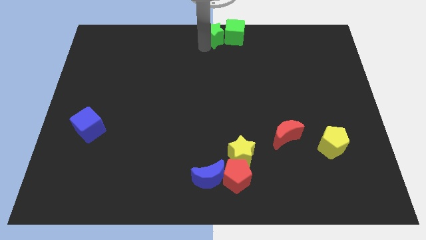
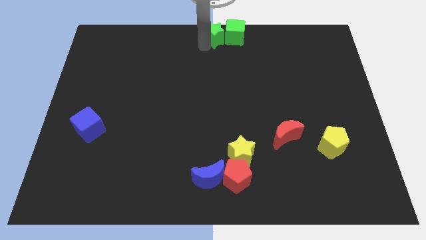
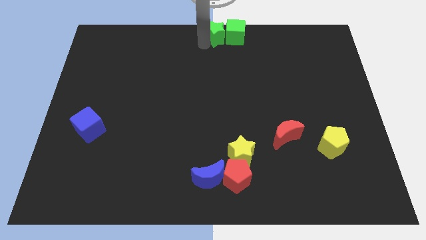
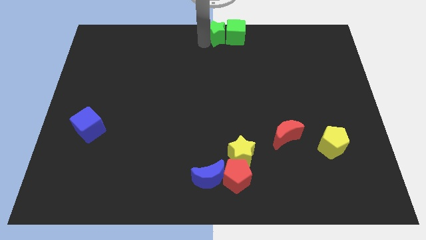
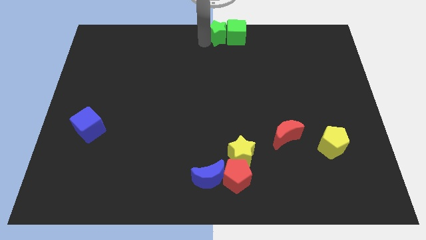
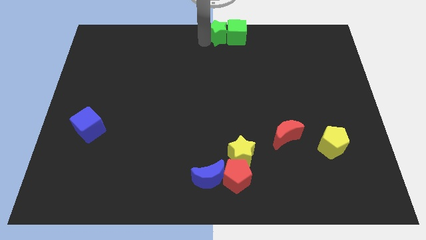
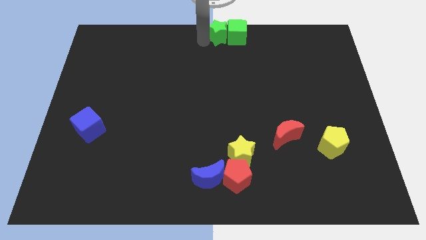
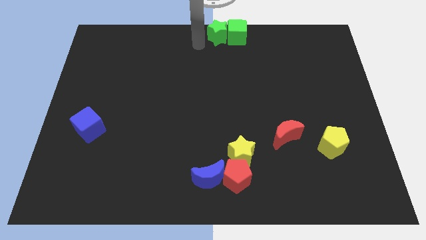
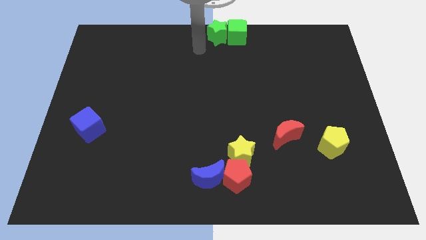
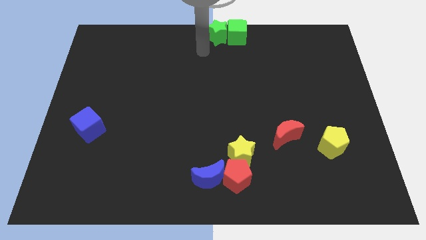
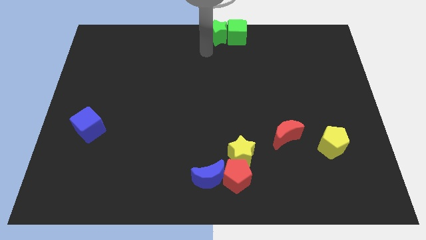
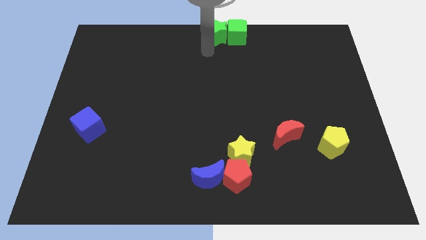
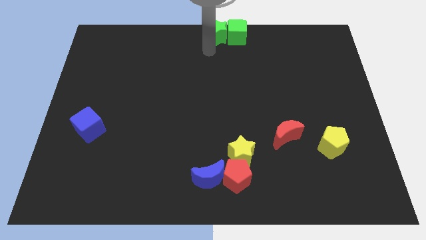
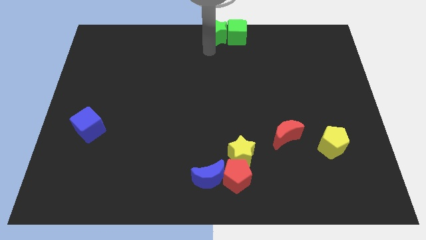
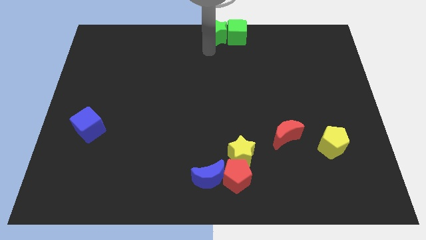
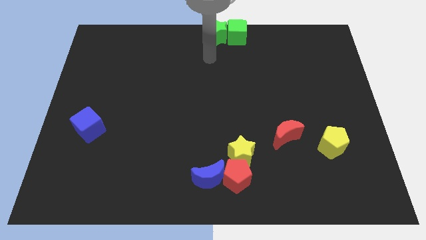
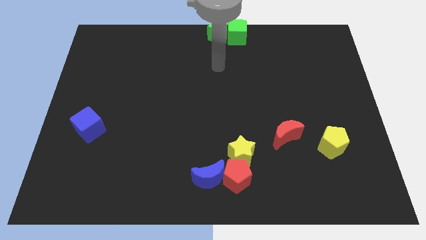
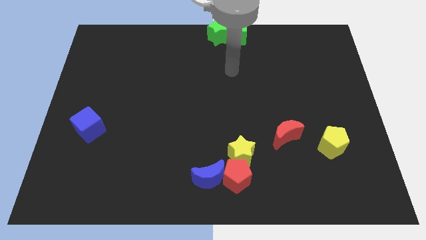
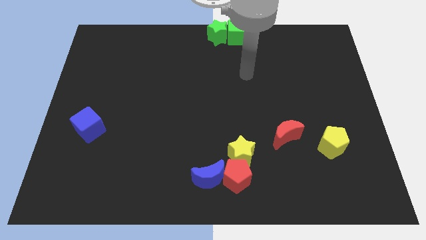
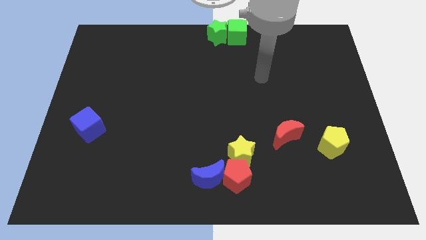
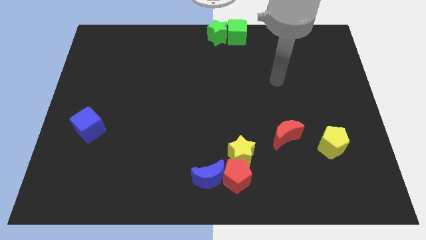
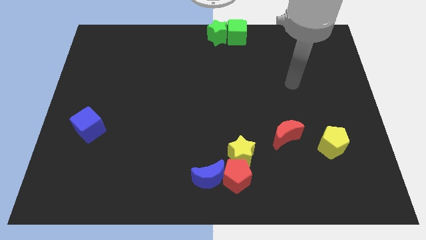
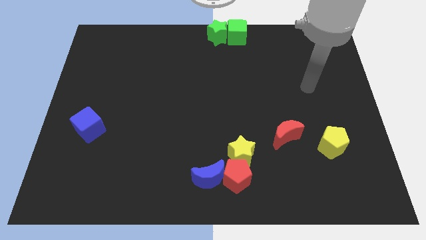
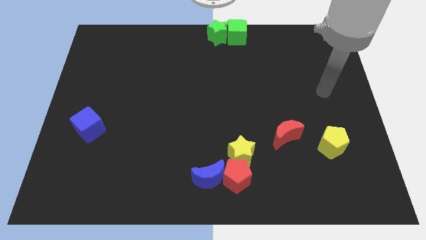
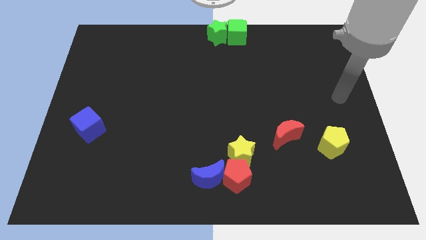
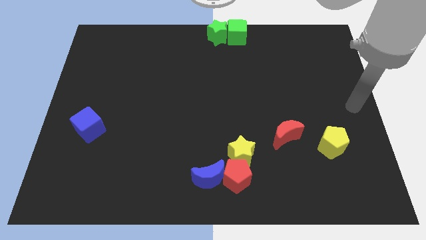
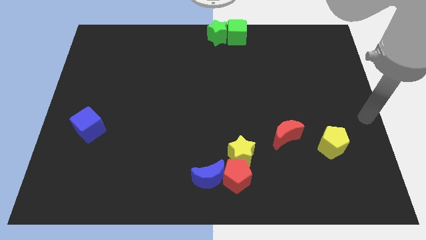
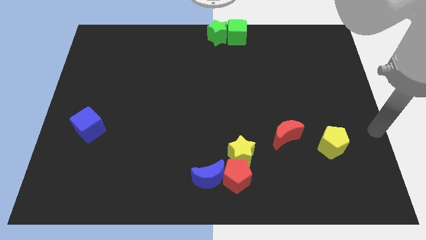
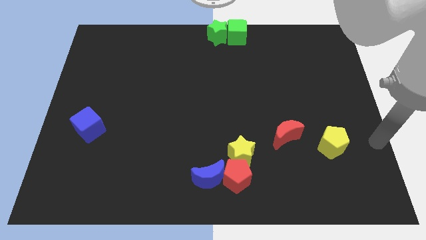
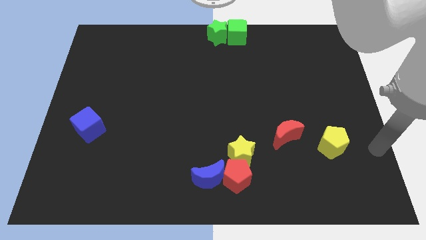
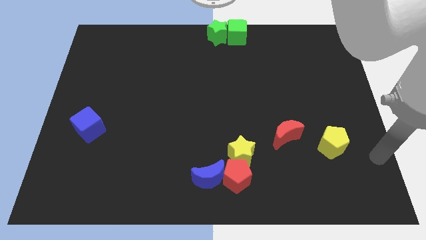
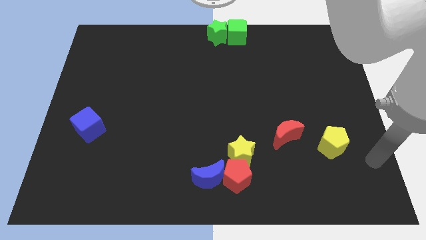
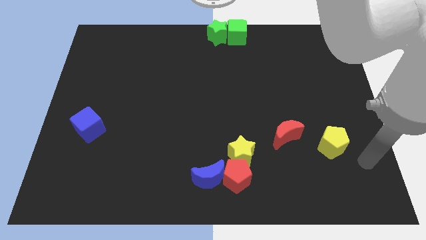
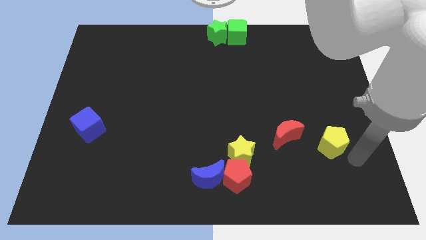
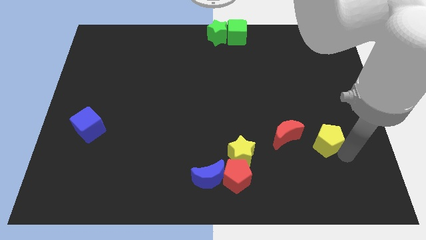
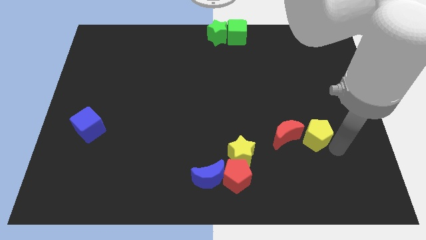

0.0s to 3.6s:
move your arm towards the yellow pentagon

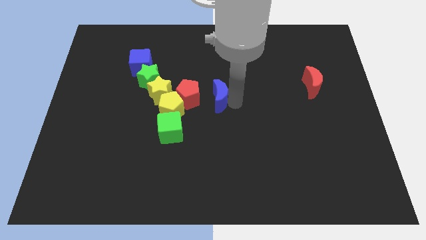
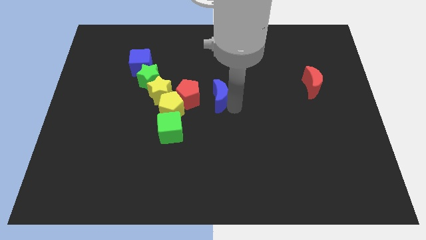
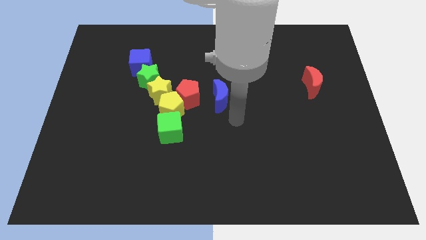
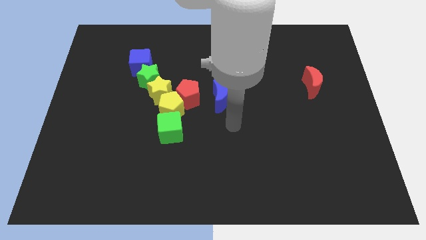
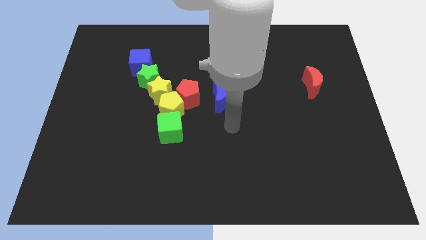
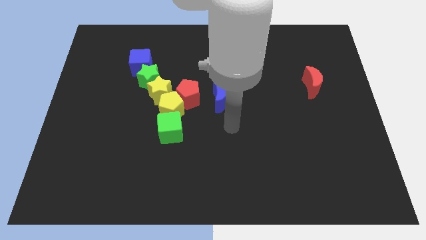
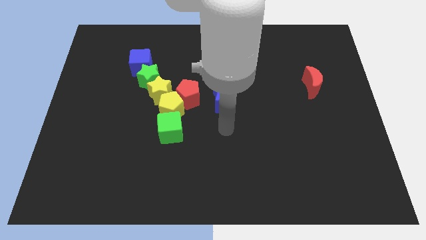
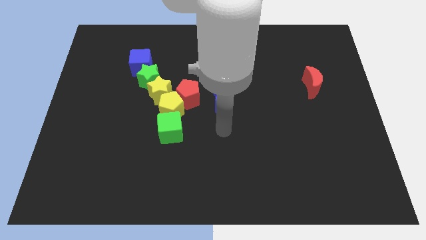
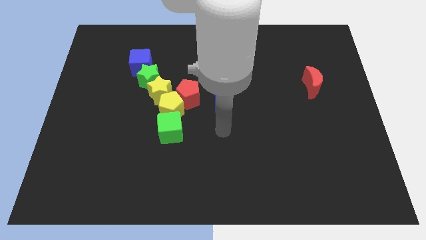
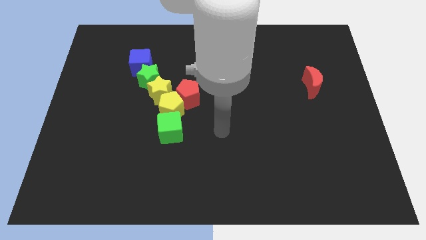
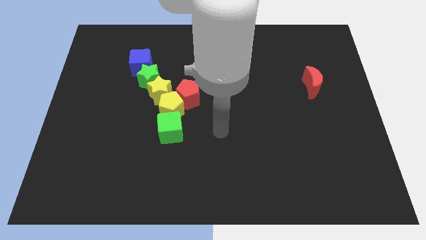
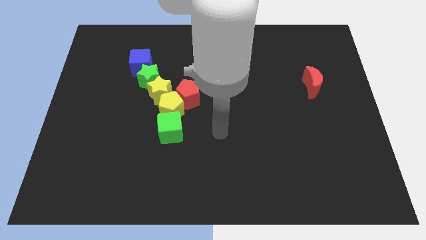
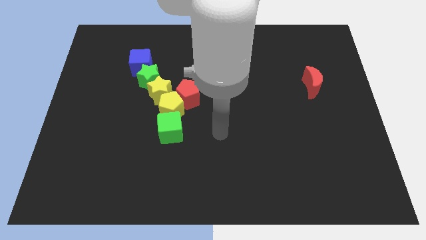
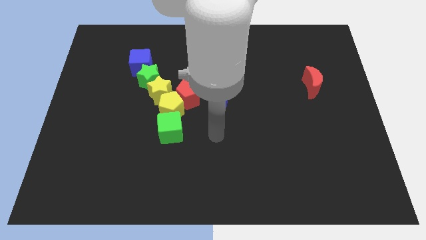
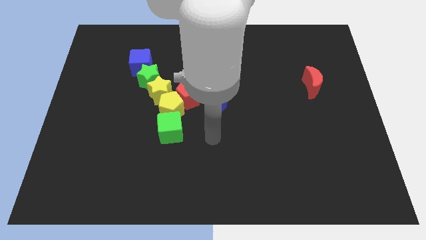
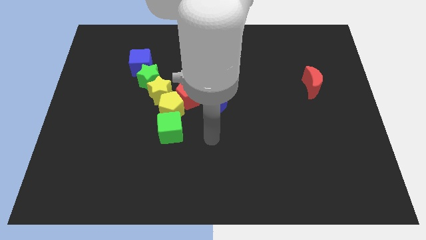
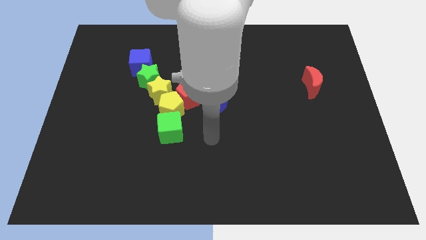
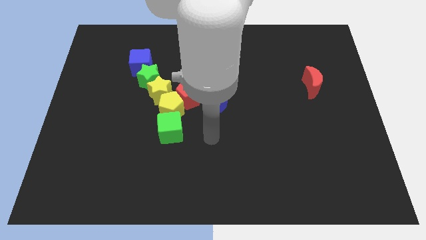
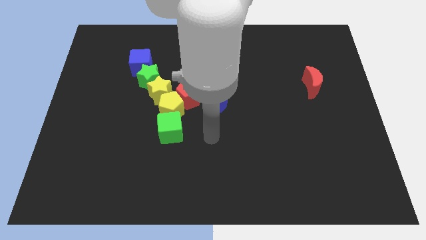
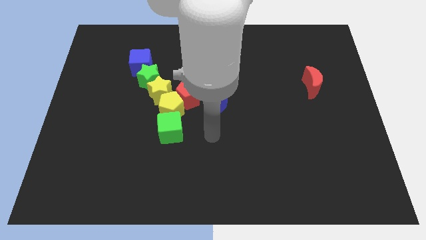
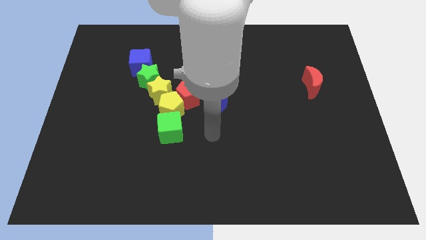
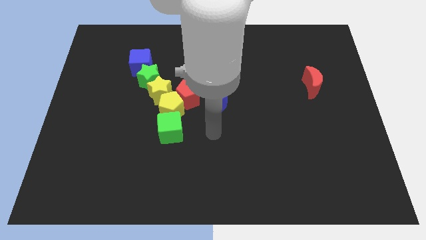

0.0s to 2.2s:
move your arm and point below the blue crescent

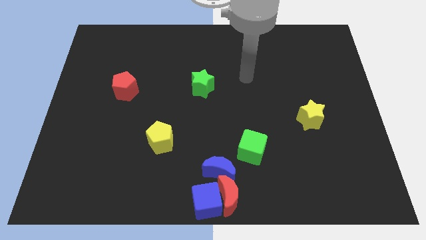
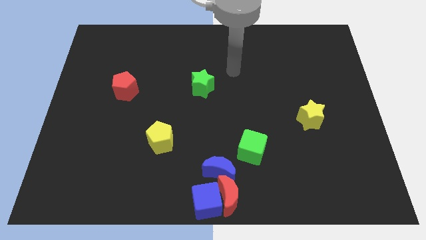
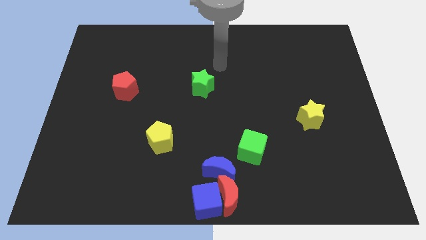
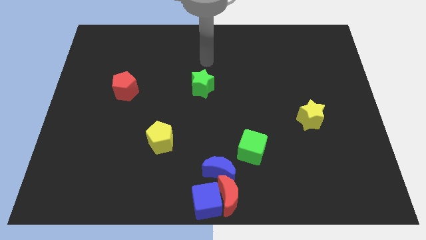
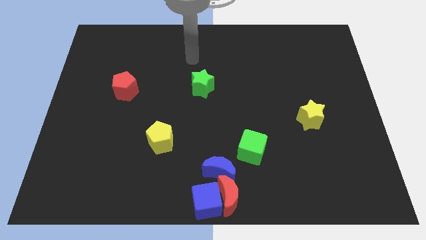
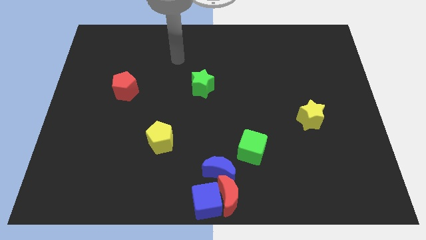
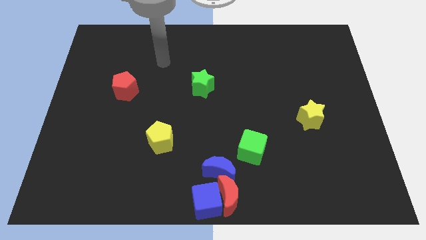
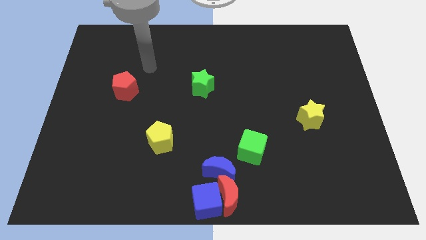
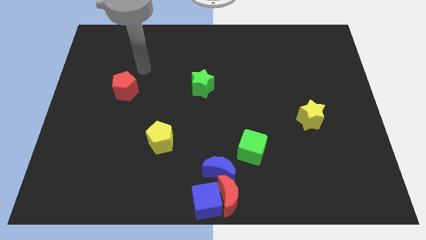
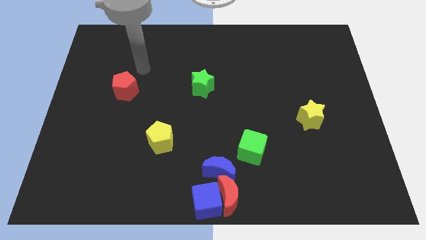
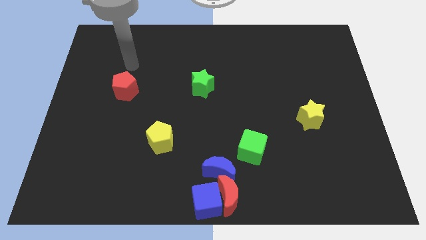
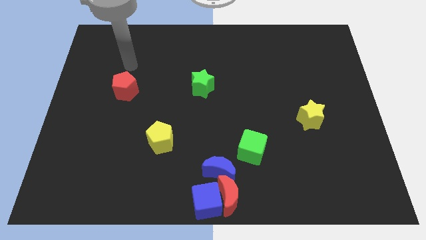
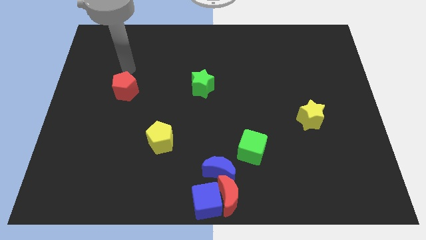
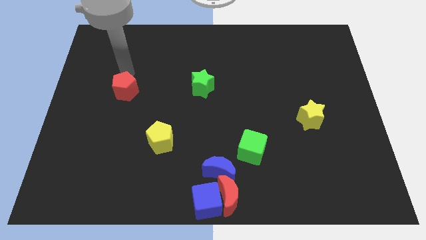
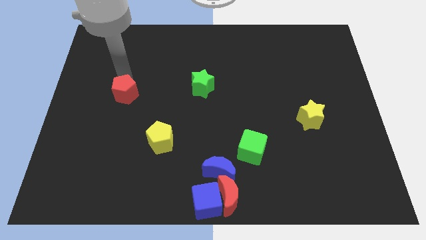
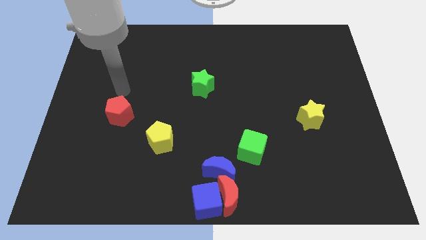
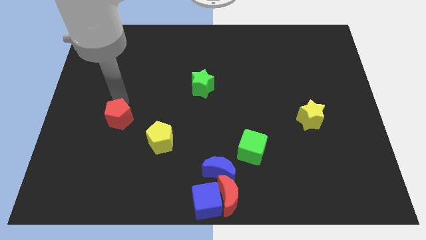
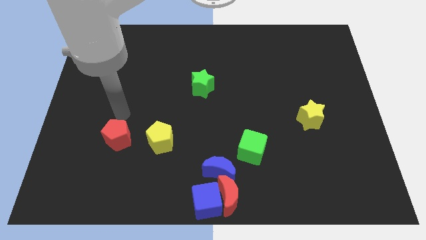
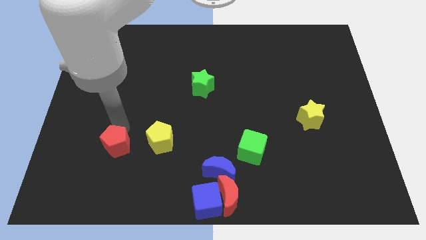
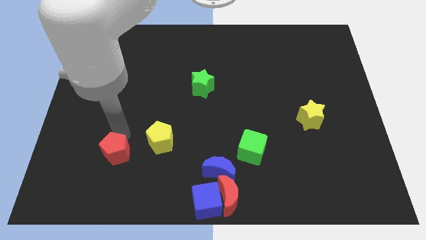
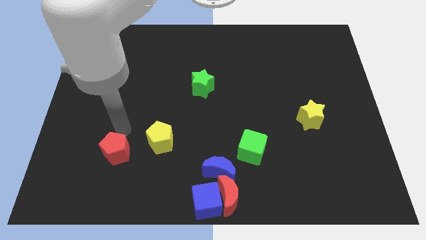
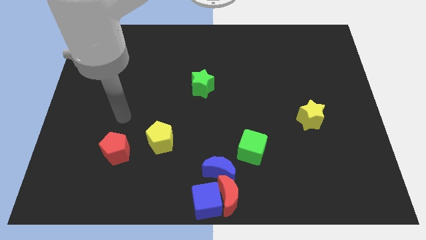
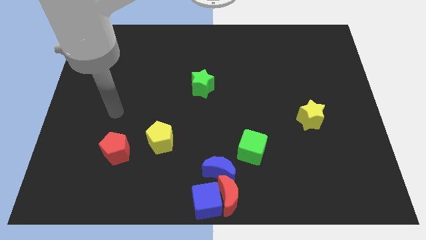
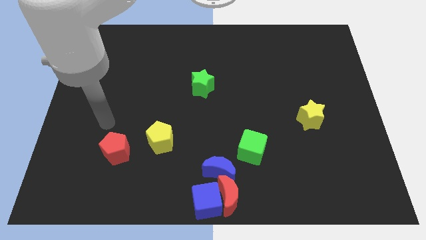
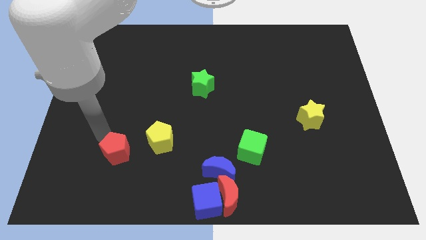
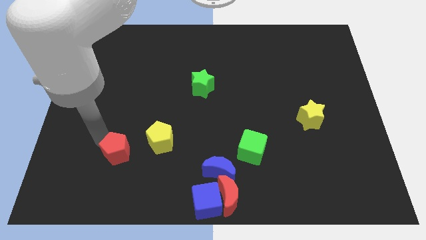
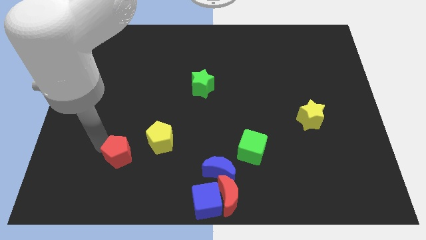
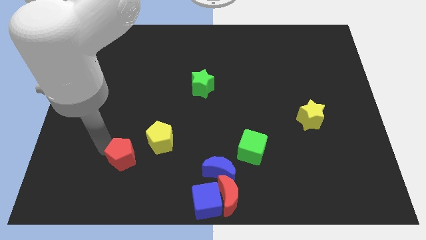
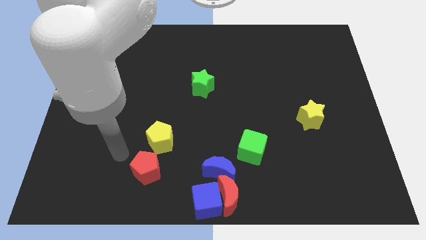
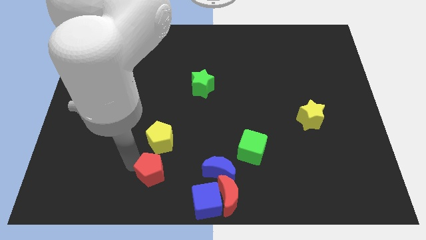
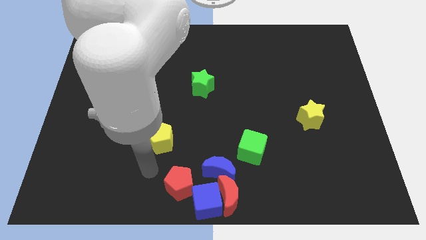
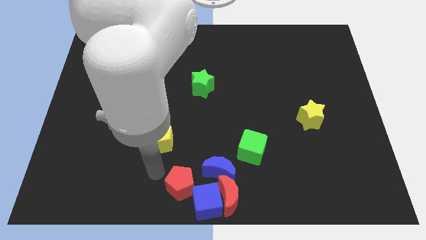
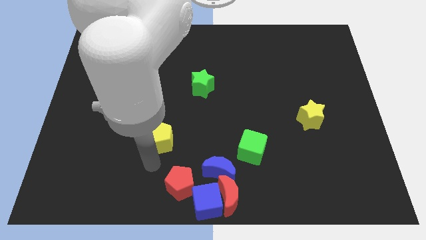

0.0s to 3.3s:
push the red pentagon towards the blue cube
